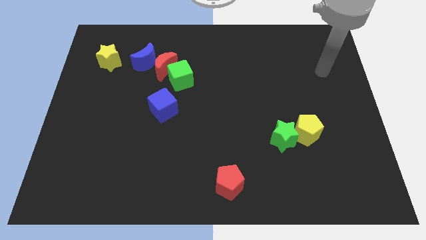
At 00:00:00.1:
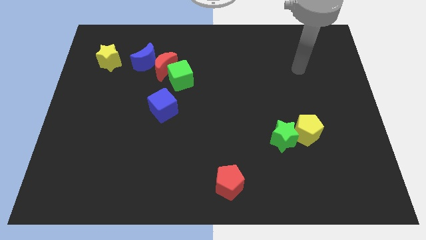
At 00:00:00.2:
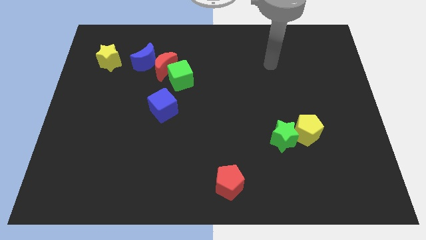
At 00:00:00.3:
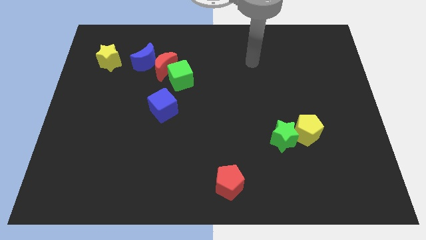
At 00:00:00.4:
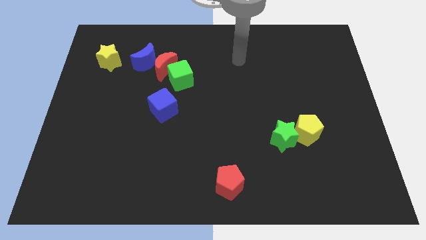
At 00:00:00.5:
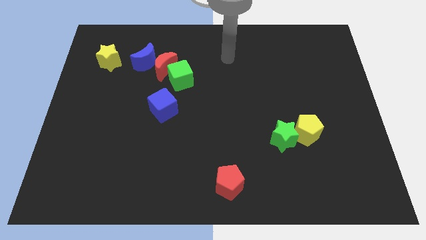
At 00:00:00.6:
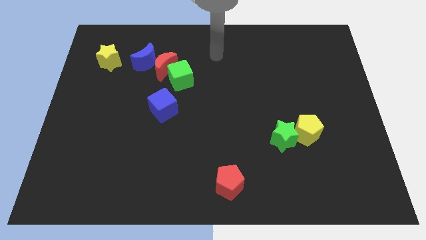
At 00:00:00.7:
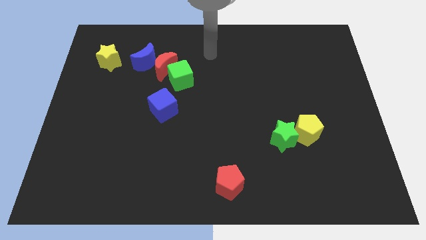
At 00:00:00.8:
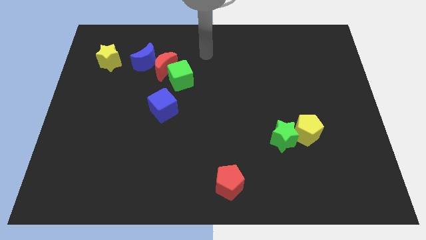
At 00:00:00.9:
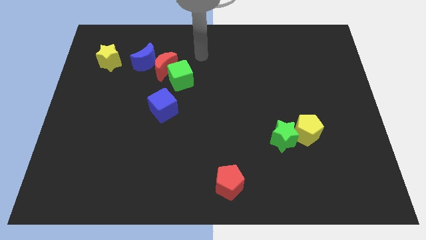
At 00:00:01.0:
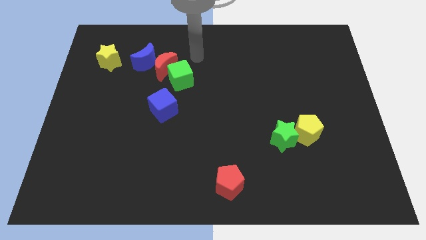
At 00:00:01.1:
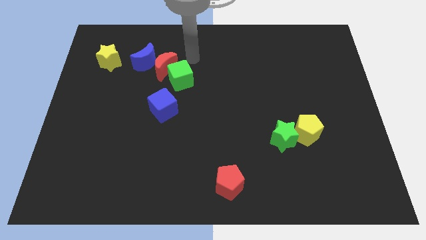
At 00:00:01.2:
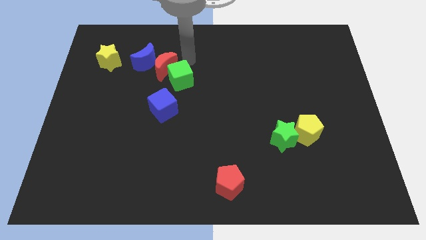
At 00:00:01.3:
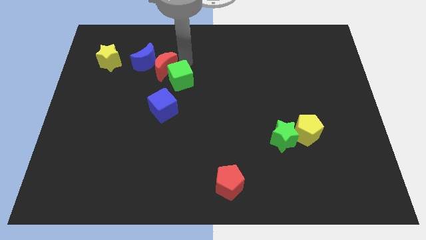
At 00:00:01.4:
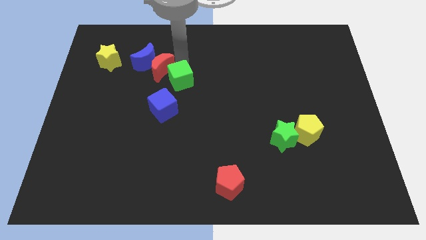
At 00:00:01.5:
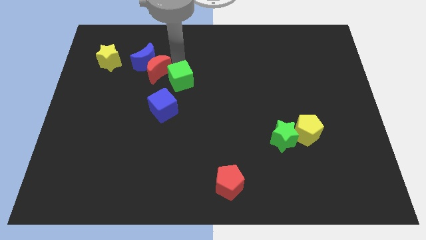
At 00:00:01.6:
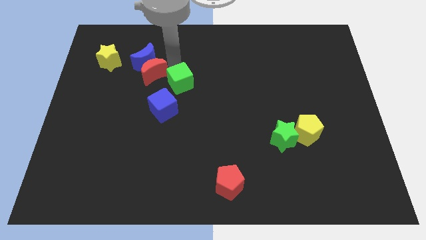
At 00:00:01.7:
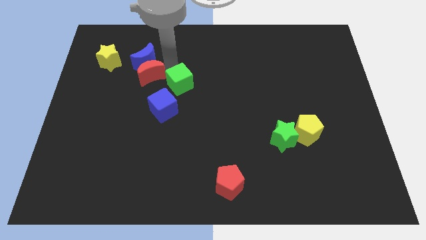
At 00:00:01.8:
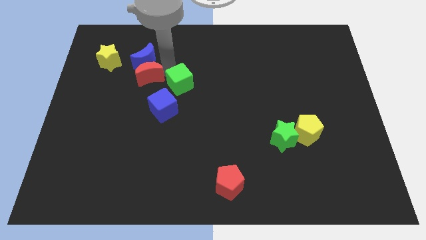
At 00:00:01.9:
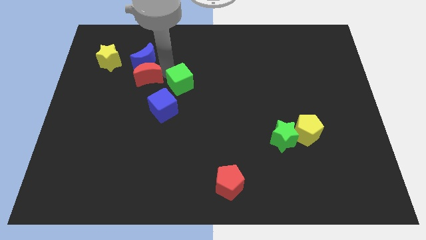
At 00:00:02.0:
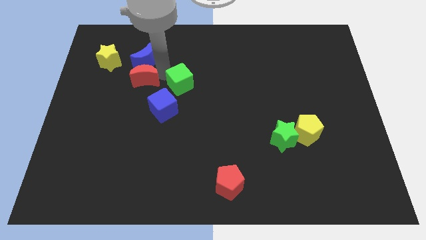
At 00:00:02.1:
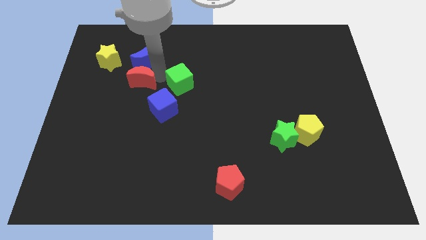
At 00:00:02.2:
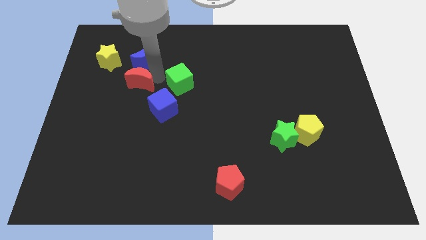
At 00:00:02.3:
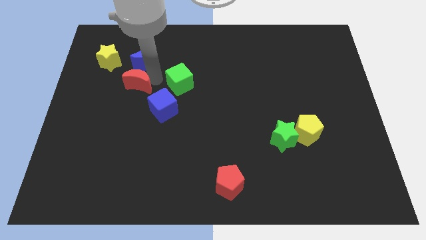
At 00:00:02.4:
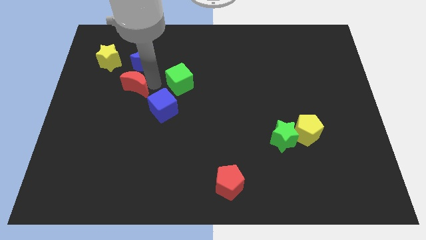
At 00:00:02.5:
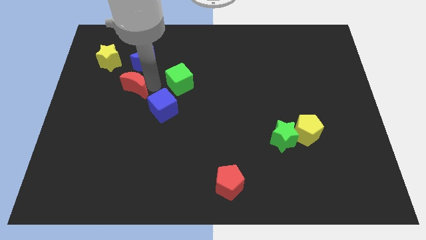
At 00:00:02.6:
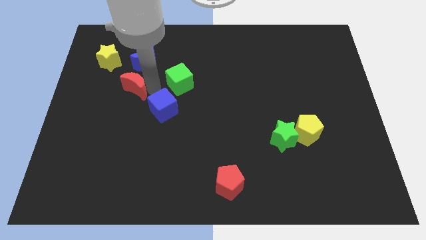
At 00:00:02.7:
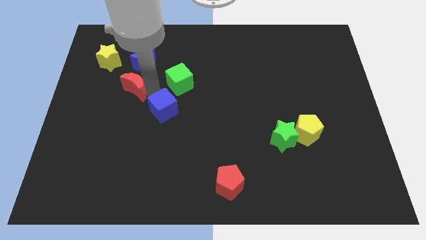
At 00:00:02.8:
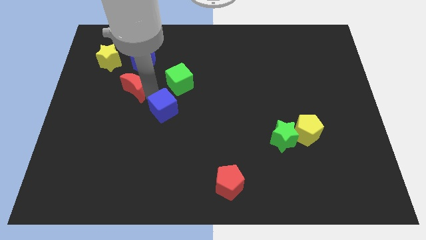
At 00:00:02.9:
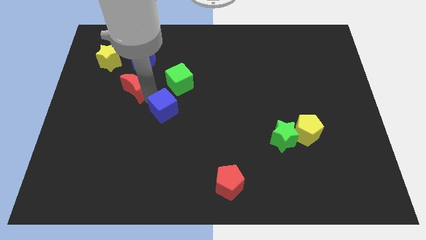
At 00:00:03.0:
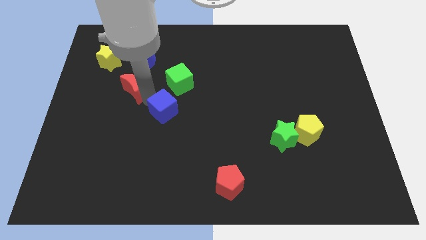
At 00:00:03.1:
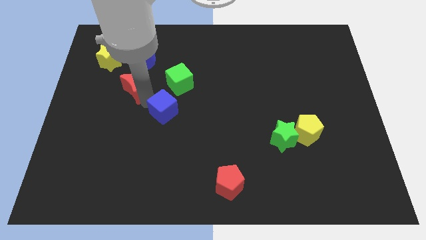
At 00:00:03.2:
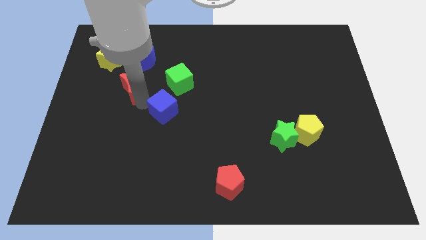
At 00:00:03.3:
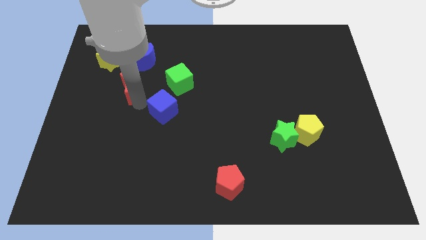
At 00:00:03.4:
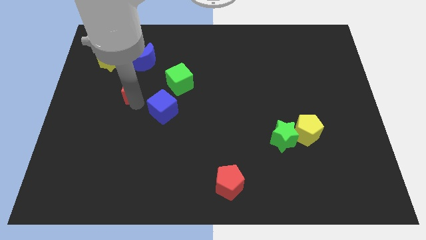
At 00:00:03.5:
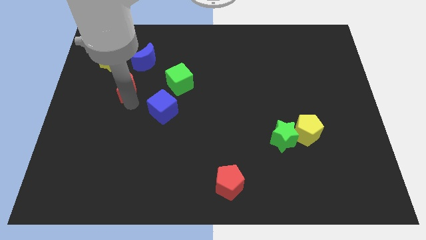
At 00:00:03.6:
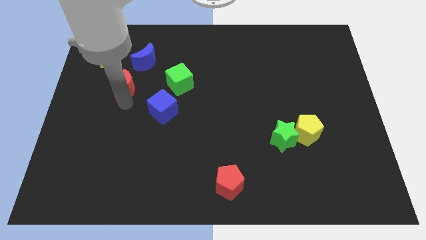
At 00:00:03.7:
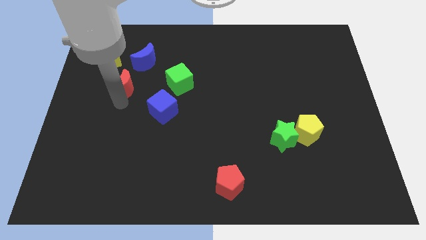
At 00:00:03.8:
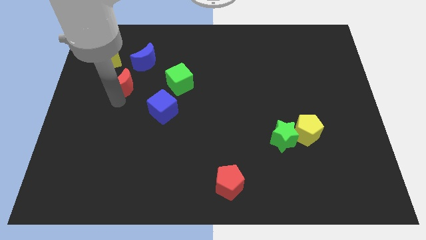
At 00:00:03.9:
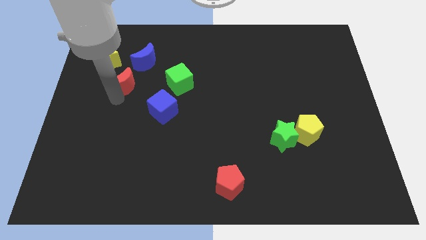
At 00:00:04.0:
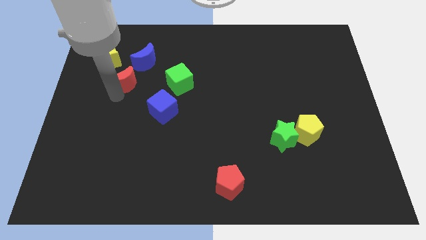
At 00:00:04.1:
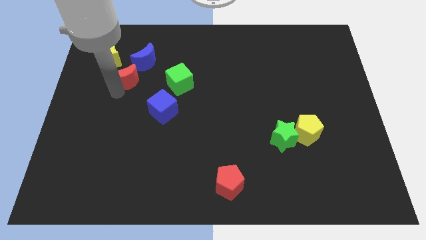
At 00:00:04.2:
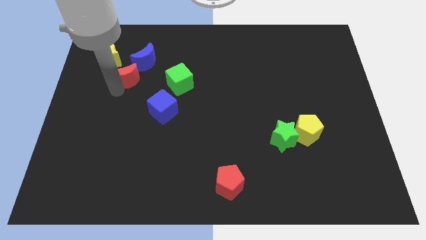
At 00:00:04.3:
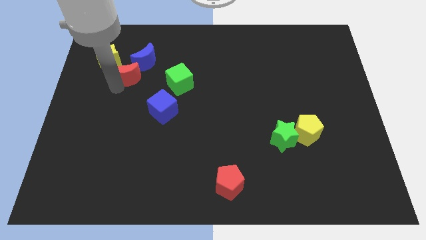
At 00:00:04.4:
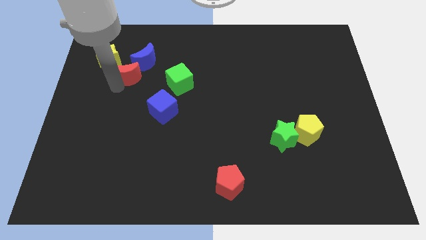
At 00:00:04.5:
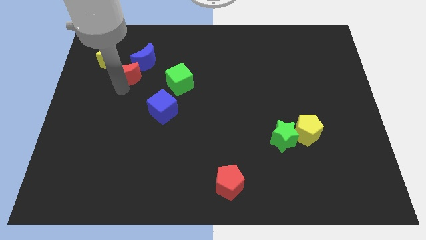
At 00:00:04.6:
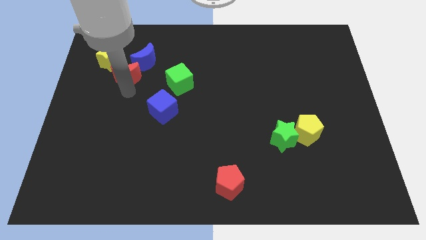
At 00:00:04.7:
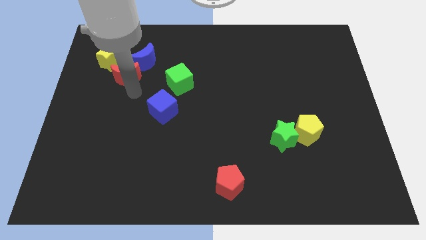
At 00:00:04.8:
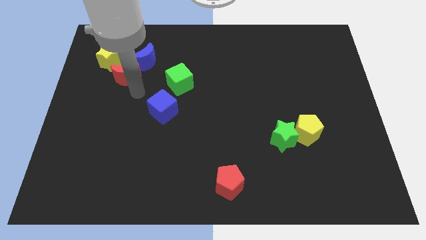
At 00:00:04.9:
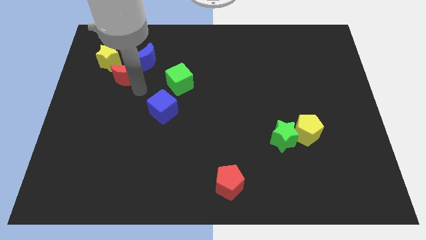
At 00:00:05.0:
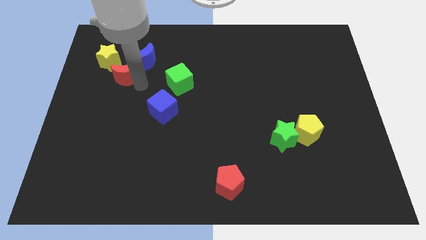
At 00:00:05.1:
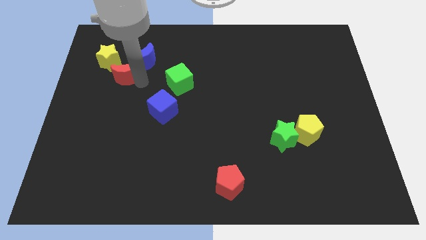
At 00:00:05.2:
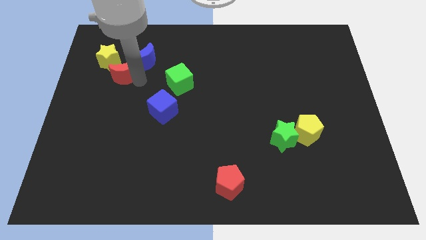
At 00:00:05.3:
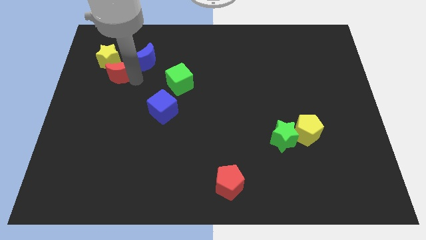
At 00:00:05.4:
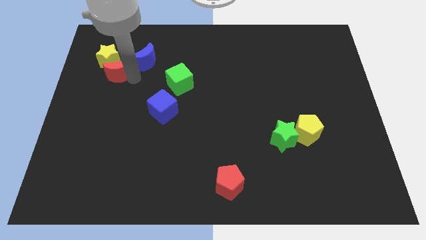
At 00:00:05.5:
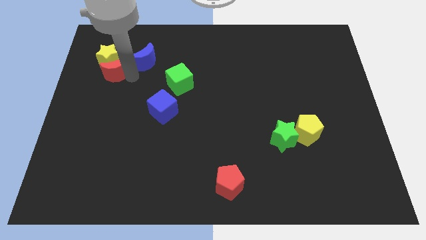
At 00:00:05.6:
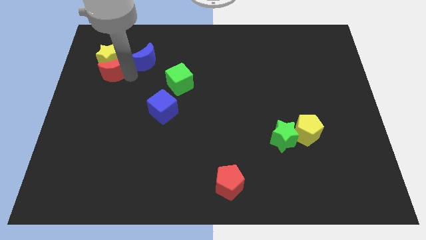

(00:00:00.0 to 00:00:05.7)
slide the red moon close to the yellow star

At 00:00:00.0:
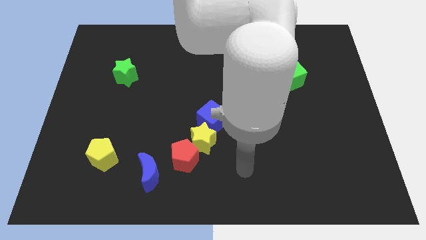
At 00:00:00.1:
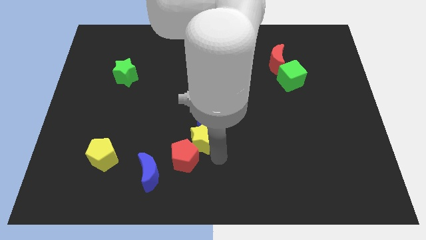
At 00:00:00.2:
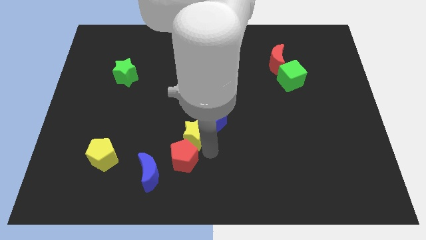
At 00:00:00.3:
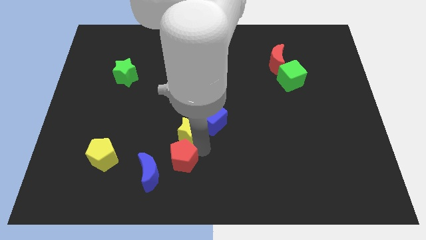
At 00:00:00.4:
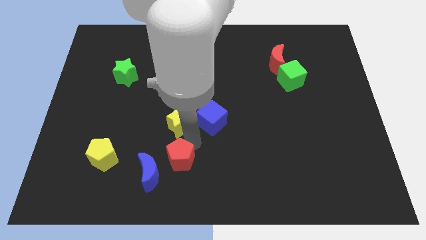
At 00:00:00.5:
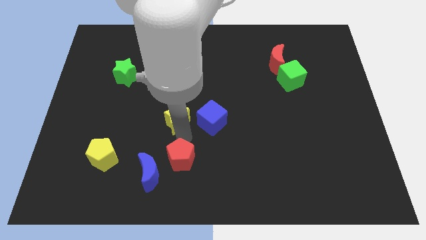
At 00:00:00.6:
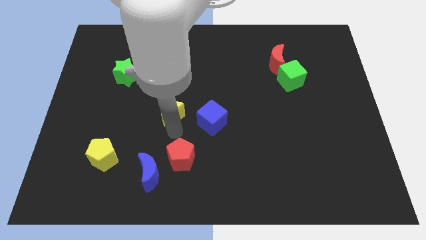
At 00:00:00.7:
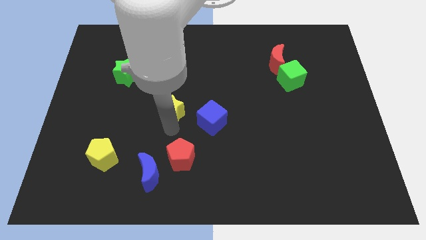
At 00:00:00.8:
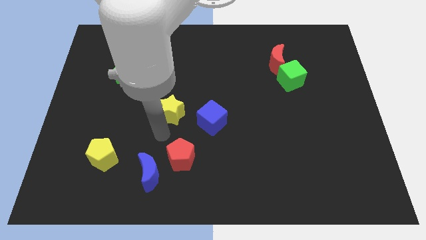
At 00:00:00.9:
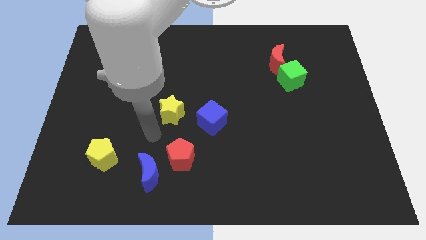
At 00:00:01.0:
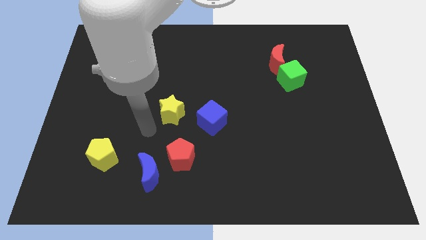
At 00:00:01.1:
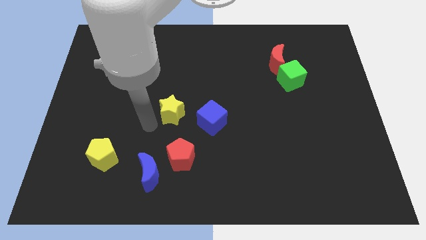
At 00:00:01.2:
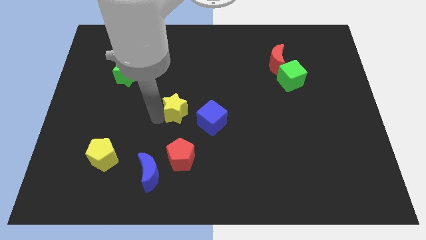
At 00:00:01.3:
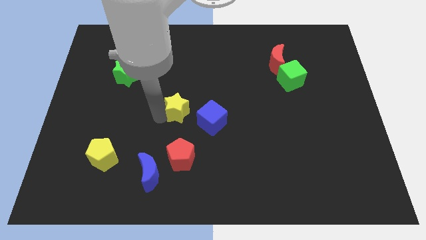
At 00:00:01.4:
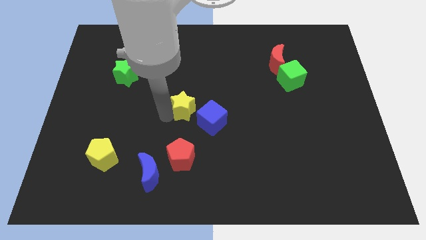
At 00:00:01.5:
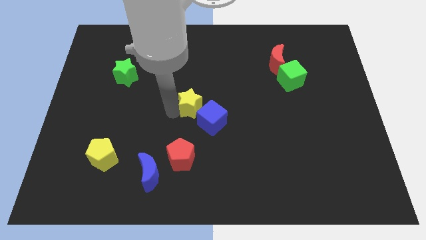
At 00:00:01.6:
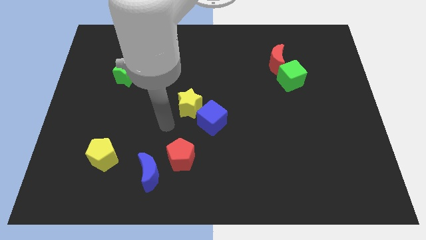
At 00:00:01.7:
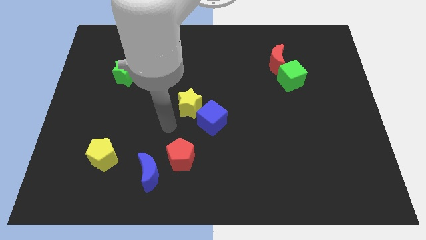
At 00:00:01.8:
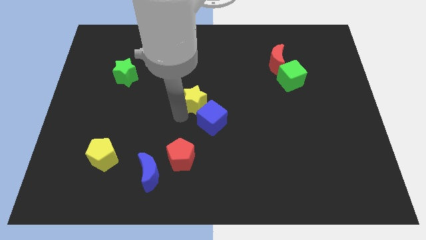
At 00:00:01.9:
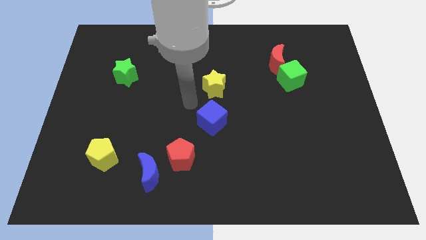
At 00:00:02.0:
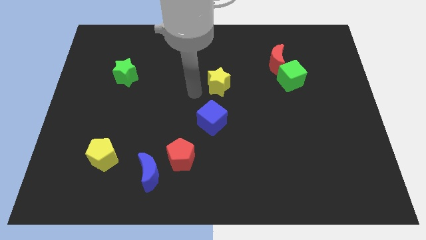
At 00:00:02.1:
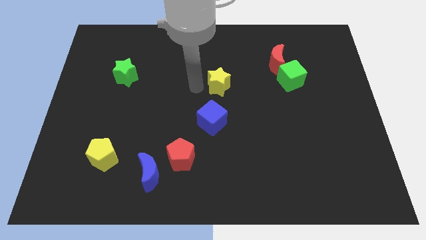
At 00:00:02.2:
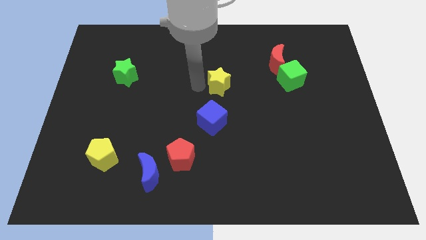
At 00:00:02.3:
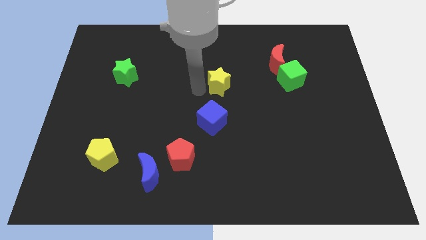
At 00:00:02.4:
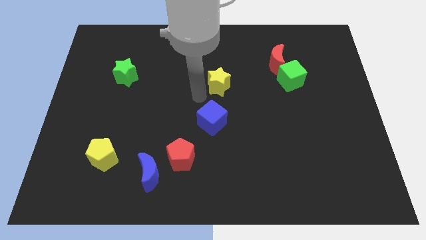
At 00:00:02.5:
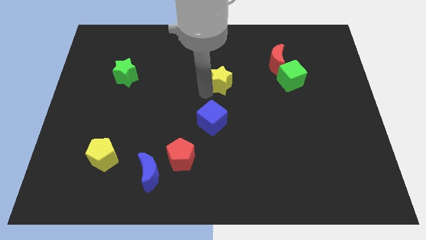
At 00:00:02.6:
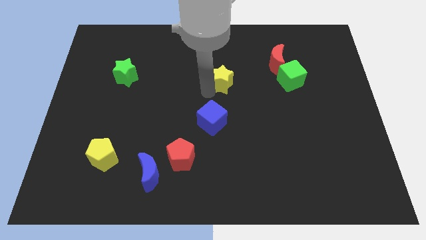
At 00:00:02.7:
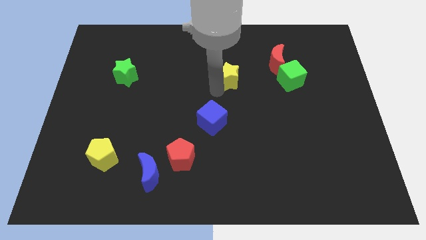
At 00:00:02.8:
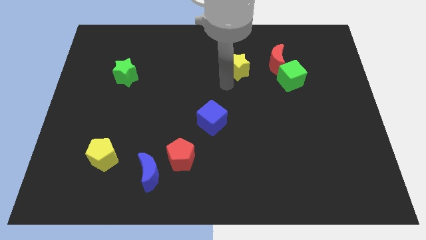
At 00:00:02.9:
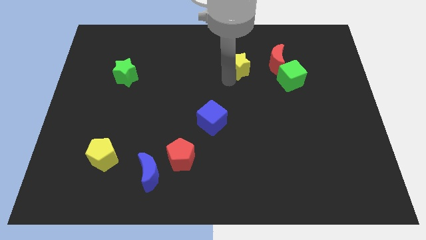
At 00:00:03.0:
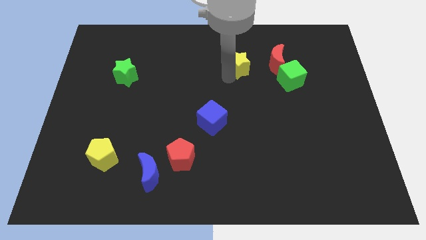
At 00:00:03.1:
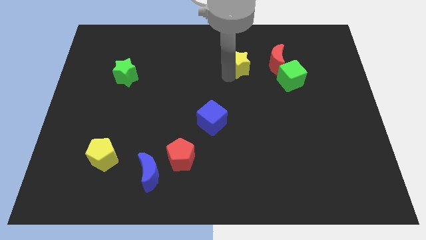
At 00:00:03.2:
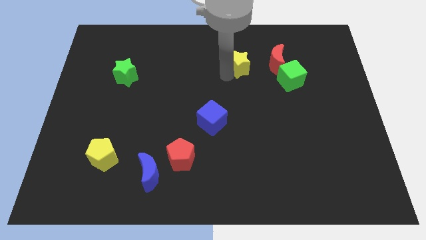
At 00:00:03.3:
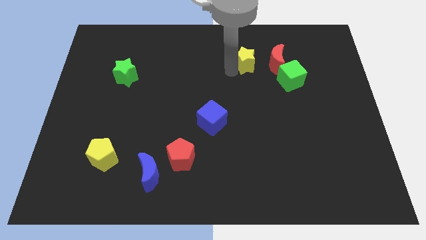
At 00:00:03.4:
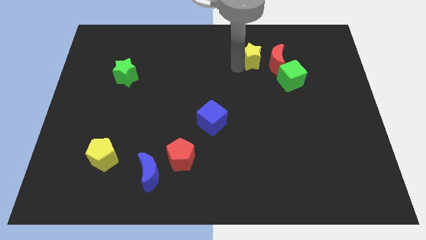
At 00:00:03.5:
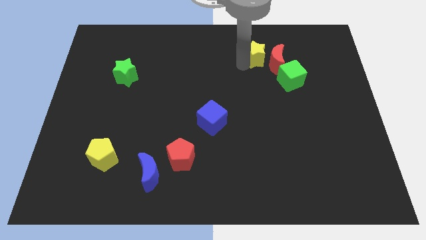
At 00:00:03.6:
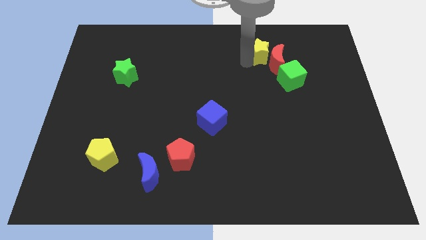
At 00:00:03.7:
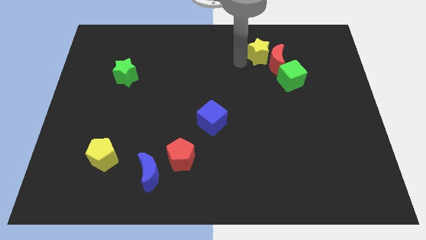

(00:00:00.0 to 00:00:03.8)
move the yellow star close to the red moon
